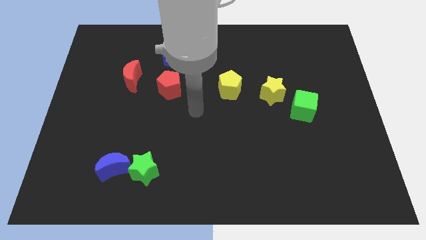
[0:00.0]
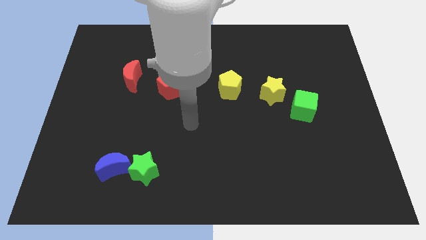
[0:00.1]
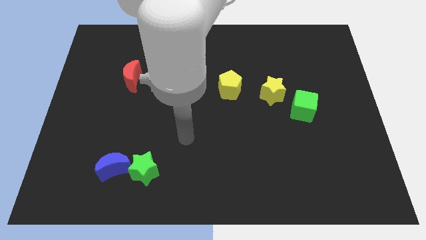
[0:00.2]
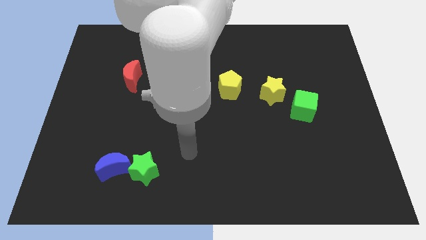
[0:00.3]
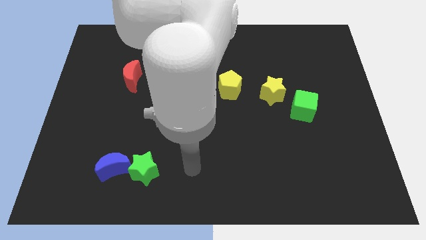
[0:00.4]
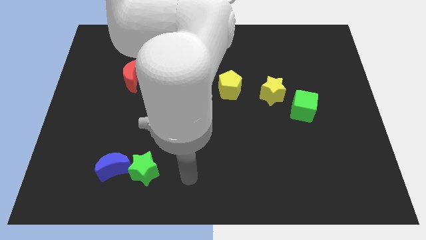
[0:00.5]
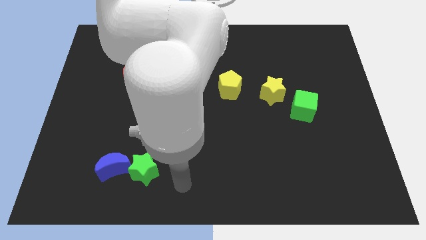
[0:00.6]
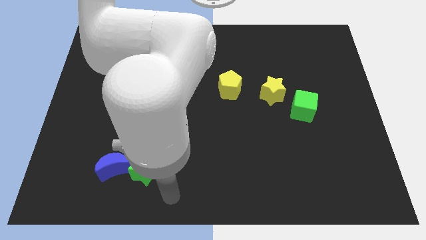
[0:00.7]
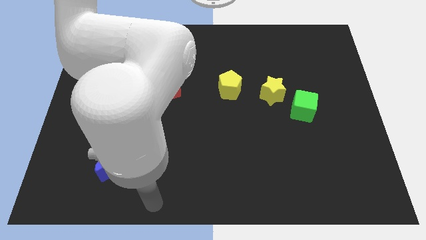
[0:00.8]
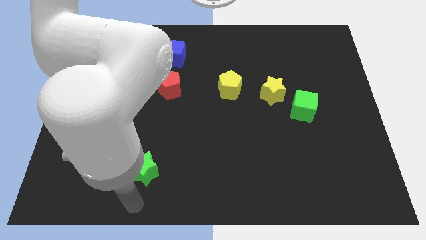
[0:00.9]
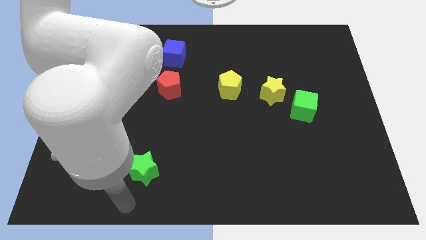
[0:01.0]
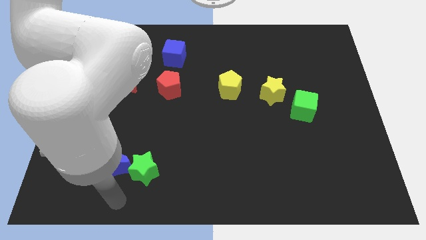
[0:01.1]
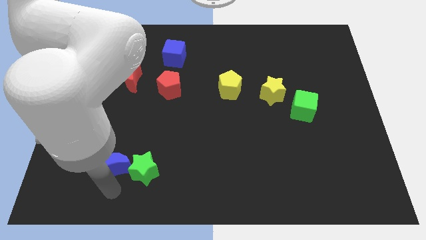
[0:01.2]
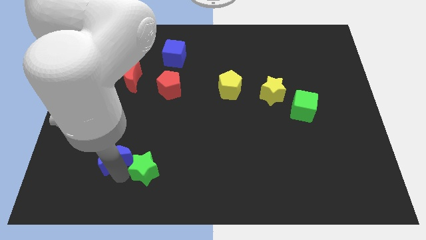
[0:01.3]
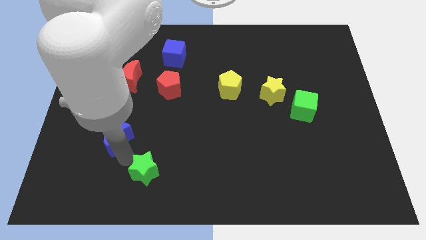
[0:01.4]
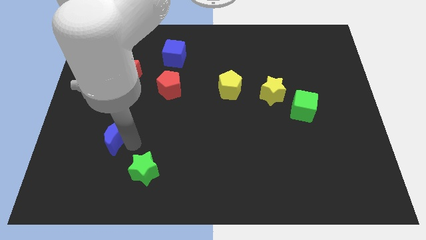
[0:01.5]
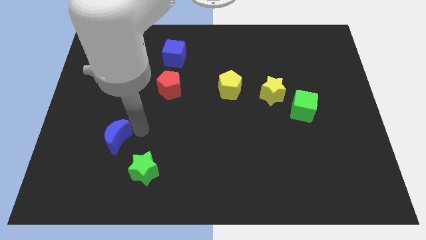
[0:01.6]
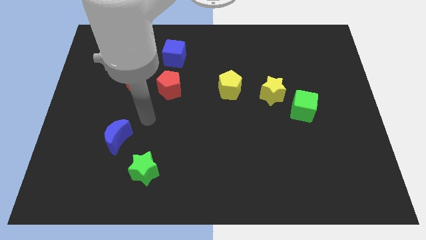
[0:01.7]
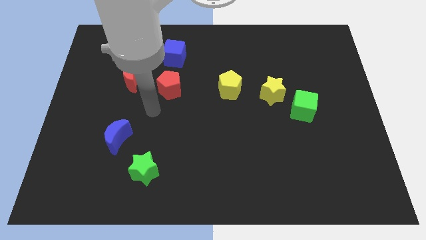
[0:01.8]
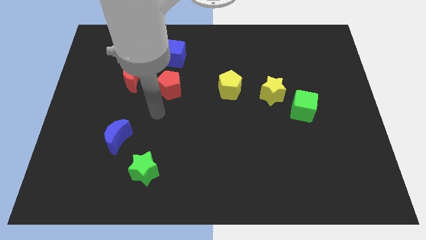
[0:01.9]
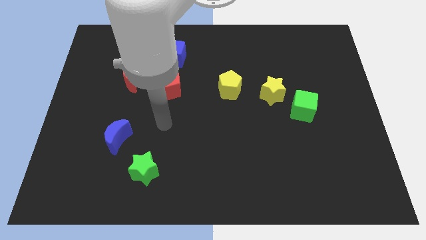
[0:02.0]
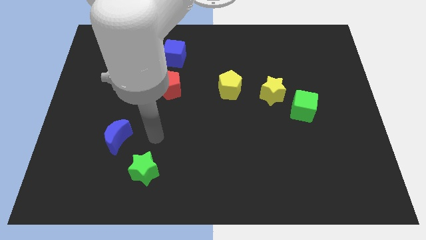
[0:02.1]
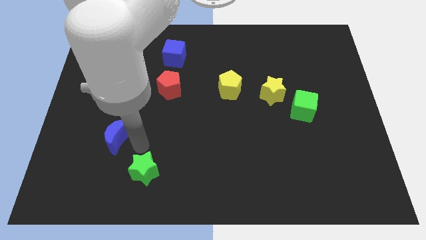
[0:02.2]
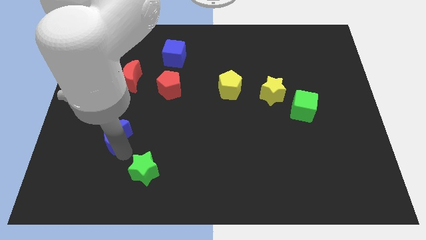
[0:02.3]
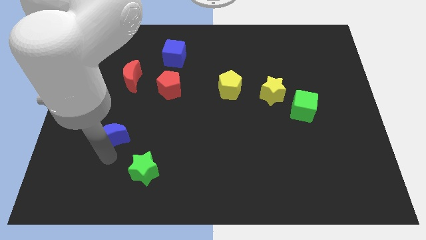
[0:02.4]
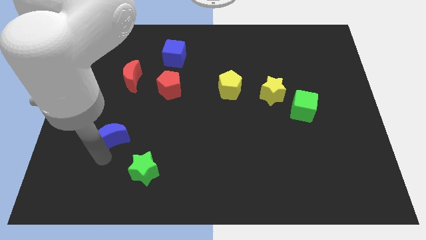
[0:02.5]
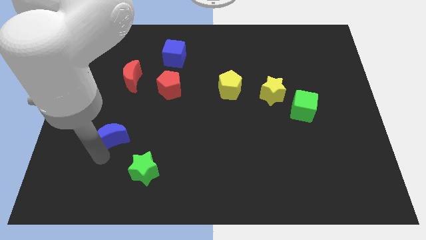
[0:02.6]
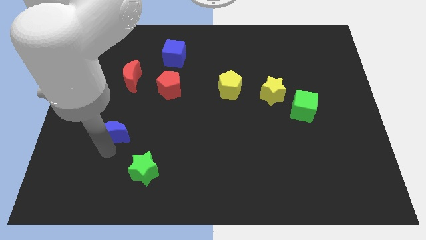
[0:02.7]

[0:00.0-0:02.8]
separate the blue crescent and the green star

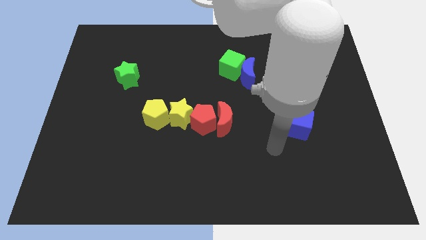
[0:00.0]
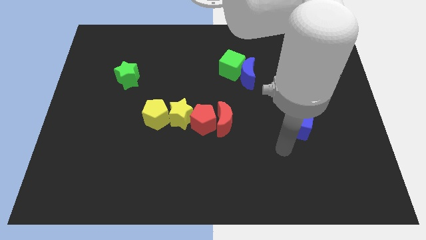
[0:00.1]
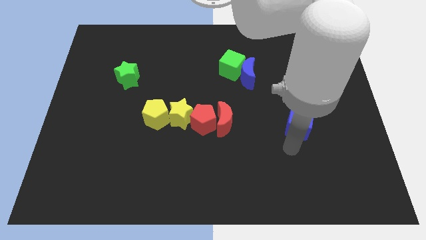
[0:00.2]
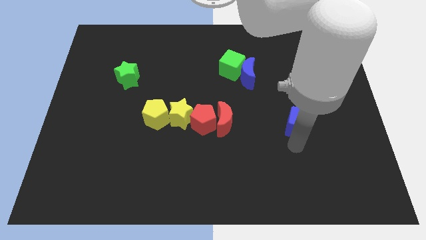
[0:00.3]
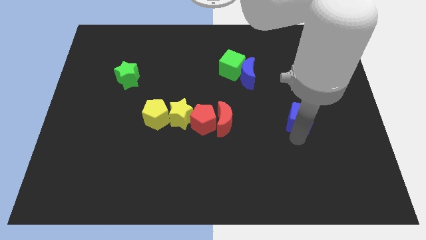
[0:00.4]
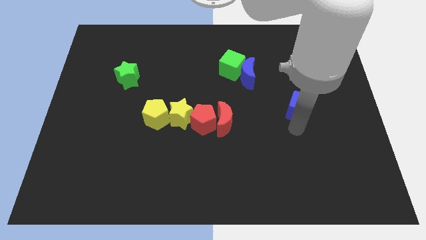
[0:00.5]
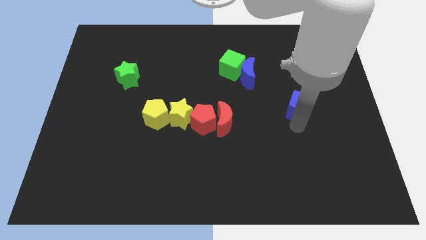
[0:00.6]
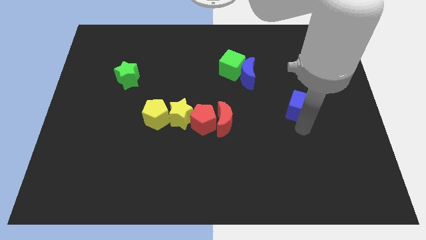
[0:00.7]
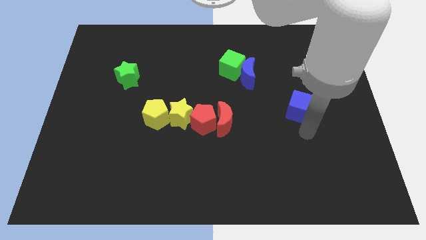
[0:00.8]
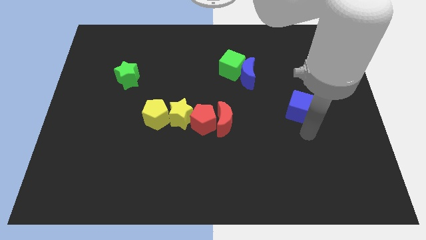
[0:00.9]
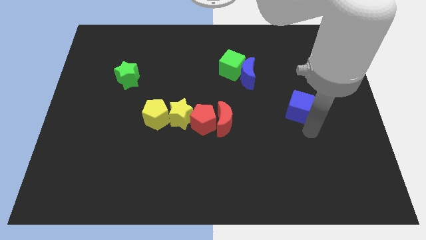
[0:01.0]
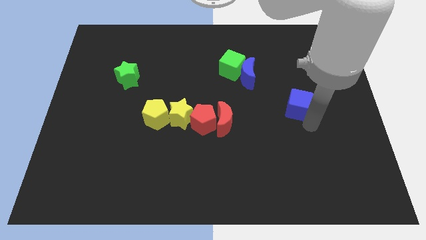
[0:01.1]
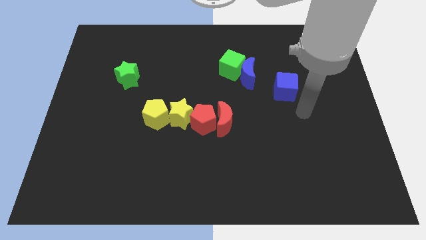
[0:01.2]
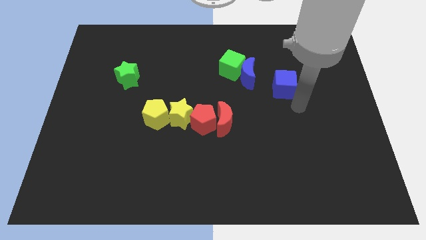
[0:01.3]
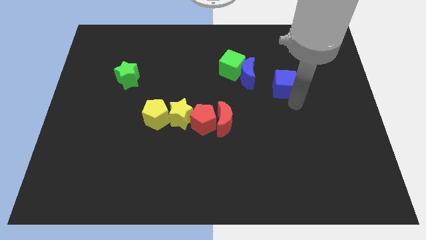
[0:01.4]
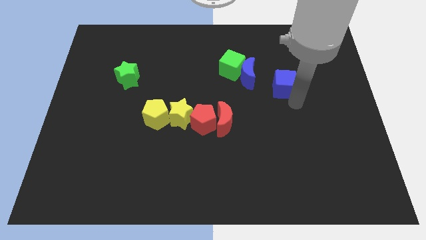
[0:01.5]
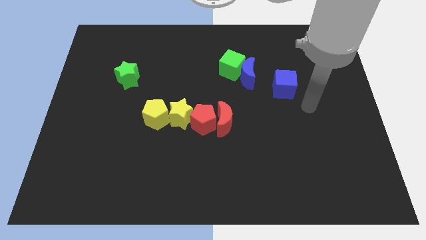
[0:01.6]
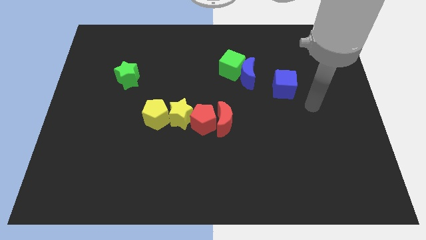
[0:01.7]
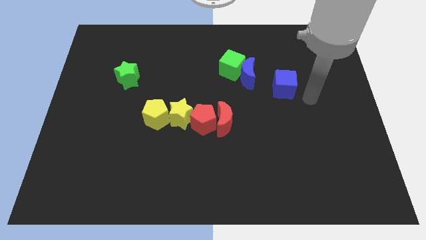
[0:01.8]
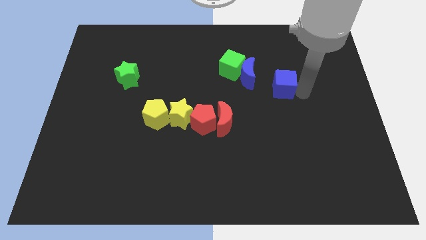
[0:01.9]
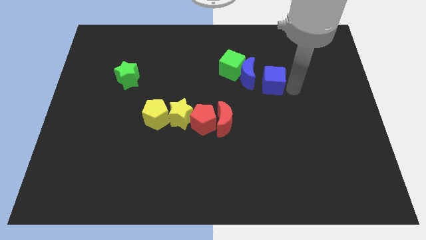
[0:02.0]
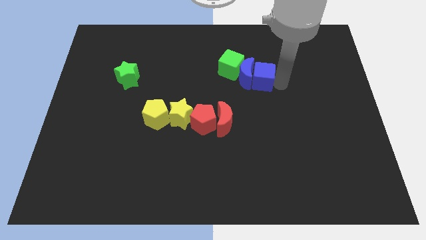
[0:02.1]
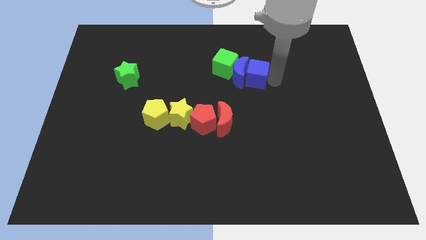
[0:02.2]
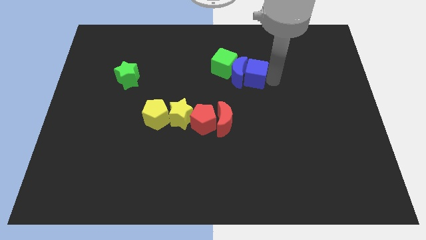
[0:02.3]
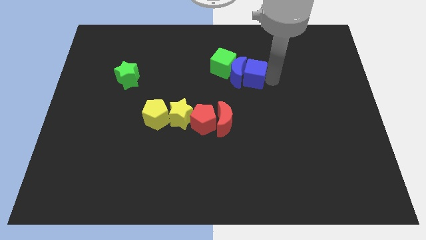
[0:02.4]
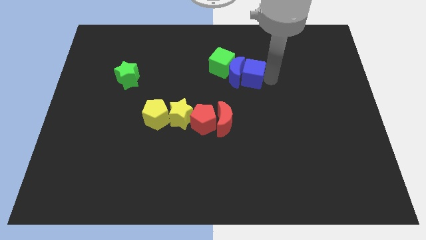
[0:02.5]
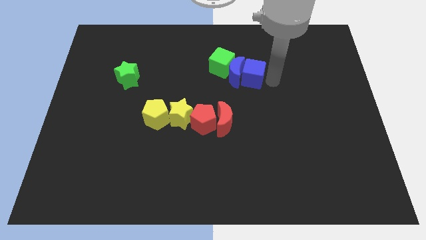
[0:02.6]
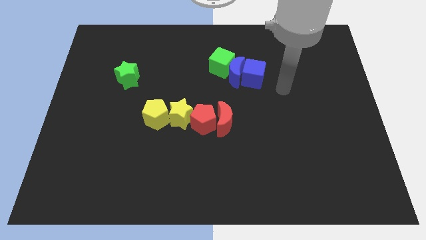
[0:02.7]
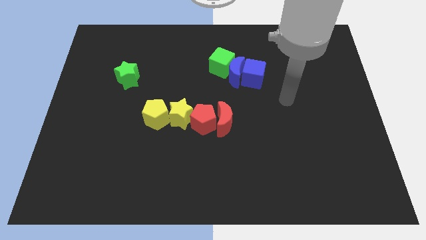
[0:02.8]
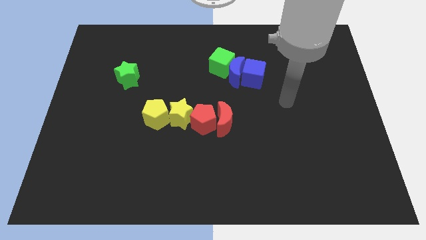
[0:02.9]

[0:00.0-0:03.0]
slide the blue cube into the blue moon

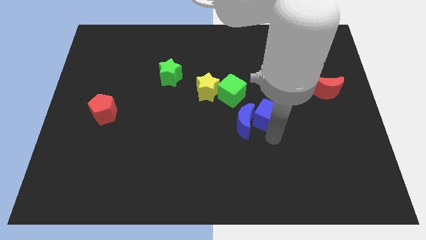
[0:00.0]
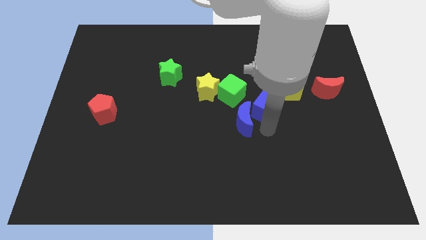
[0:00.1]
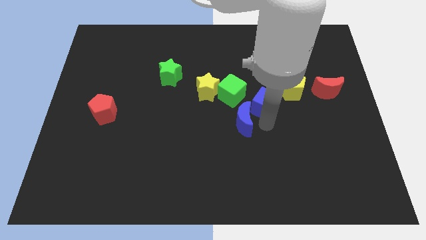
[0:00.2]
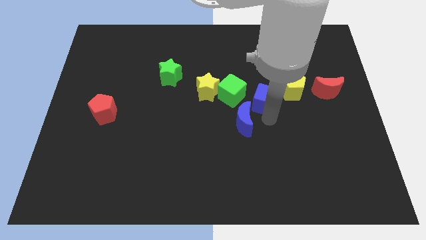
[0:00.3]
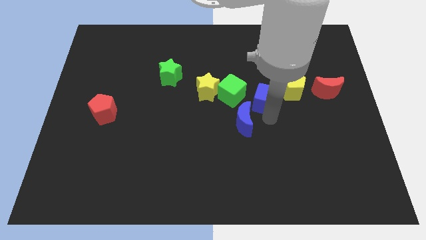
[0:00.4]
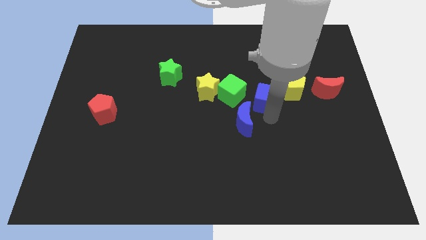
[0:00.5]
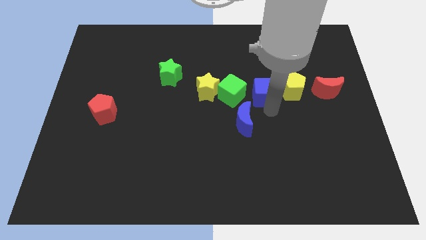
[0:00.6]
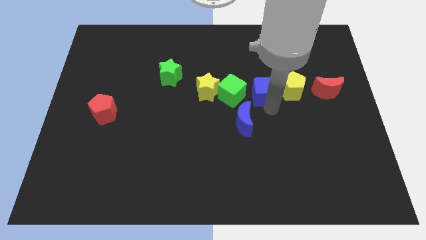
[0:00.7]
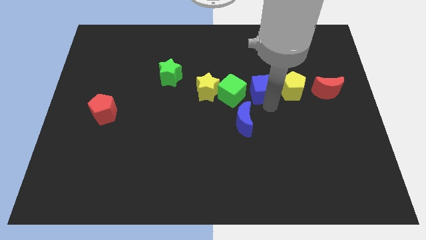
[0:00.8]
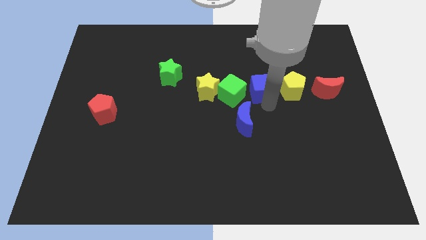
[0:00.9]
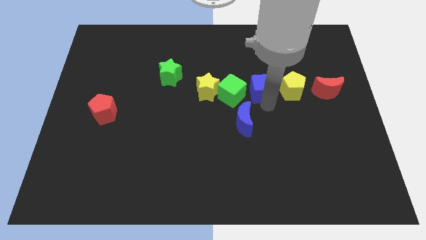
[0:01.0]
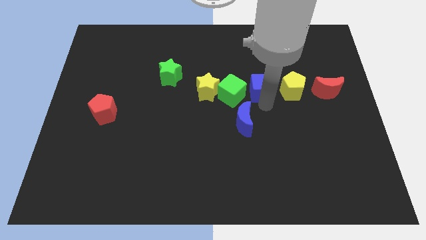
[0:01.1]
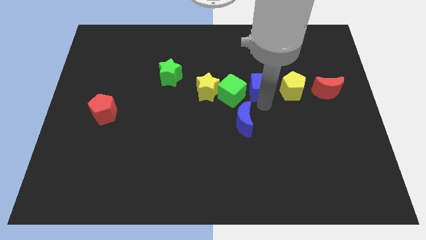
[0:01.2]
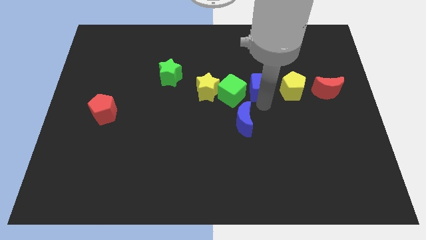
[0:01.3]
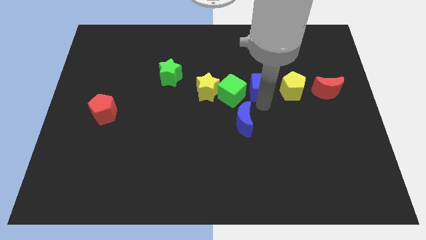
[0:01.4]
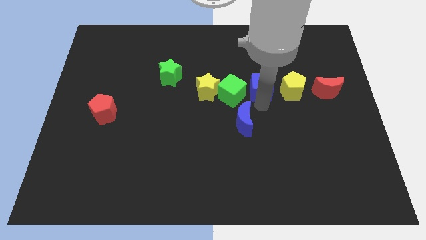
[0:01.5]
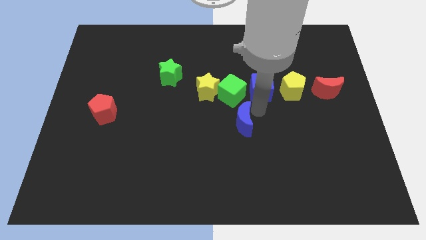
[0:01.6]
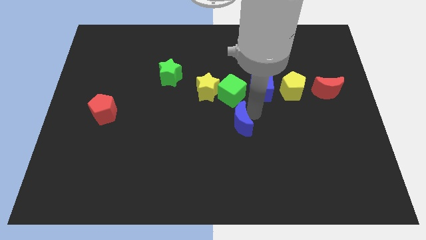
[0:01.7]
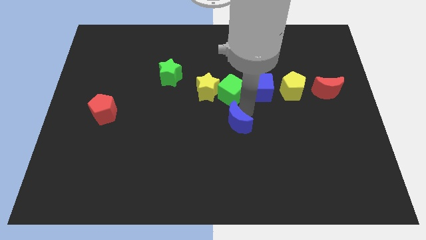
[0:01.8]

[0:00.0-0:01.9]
put the blue cube in between the yellow pentagon and green cube

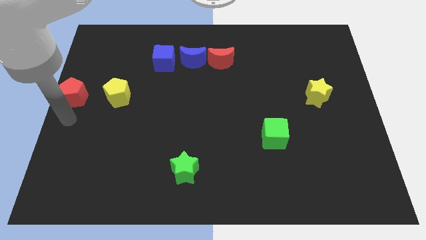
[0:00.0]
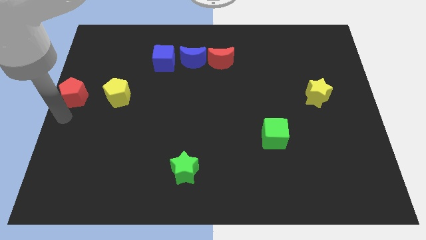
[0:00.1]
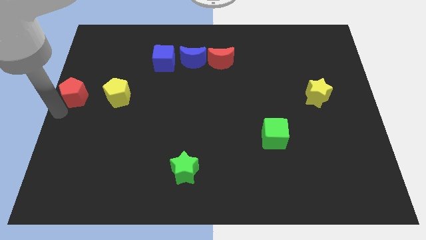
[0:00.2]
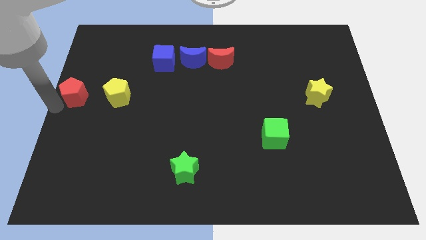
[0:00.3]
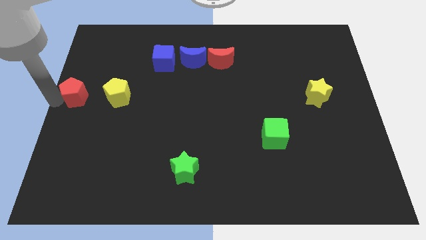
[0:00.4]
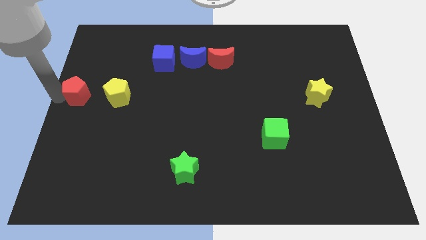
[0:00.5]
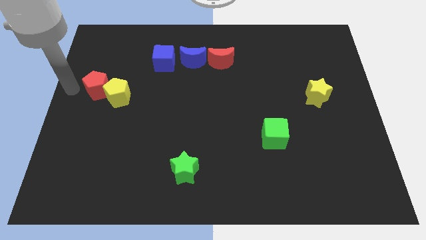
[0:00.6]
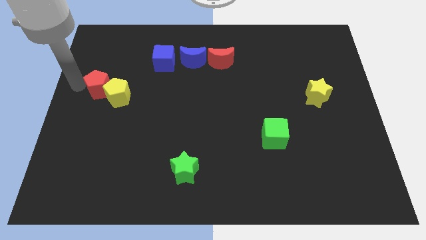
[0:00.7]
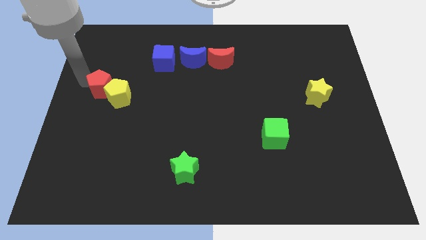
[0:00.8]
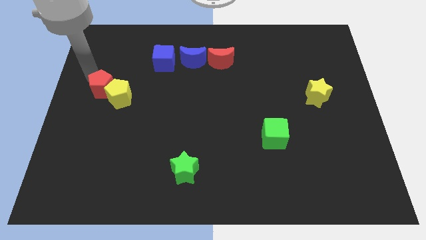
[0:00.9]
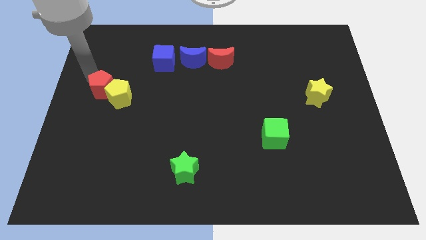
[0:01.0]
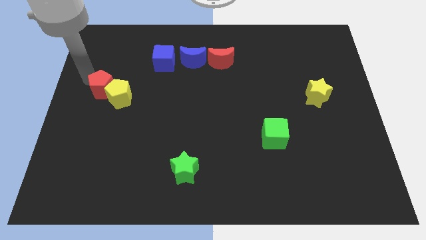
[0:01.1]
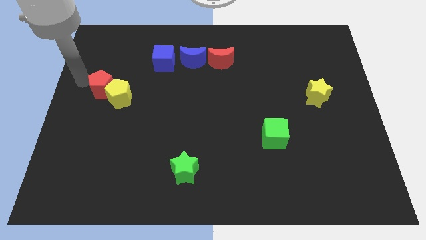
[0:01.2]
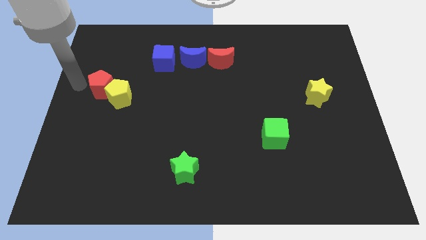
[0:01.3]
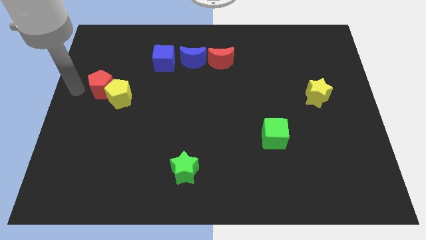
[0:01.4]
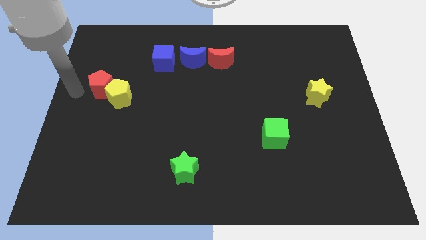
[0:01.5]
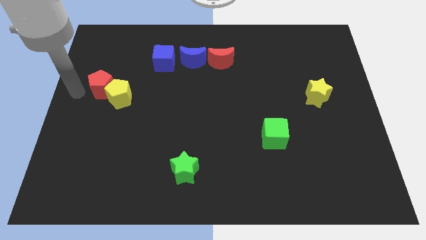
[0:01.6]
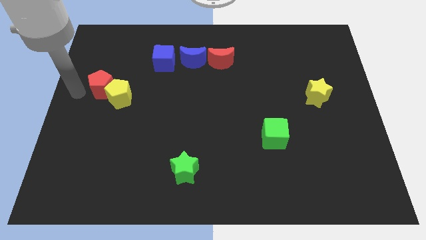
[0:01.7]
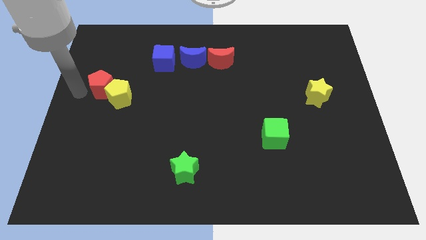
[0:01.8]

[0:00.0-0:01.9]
attach red pentagon and yellow pentagon
